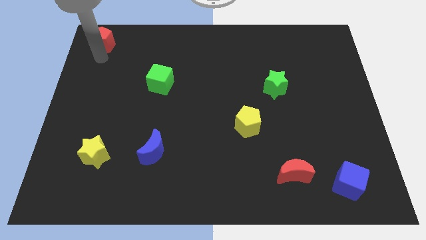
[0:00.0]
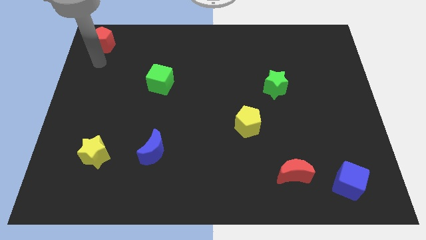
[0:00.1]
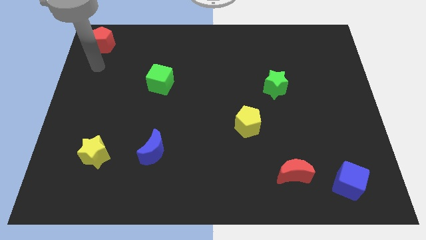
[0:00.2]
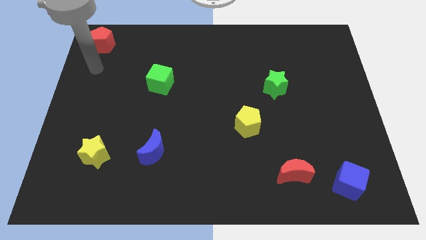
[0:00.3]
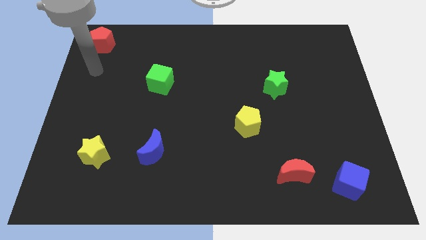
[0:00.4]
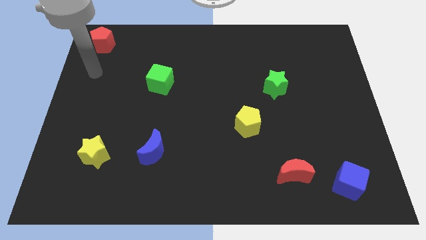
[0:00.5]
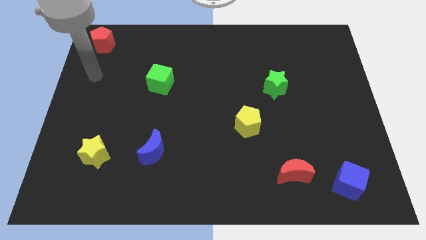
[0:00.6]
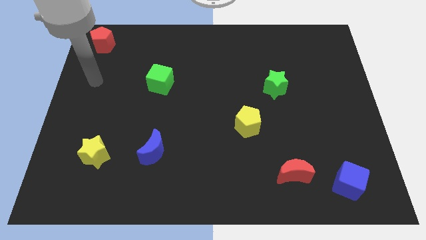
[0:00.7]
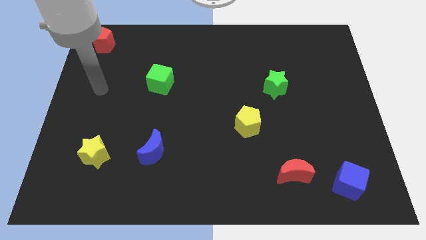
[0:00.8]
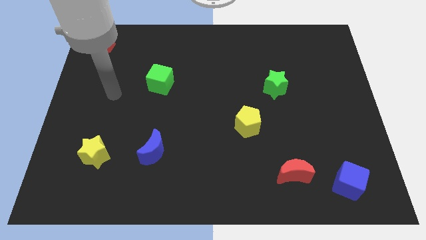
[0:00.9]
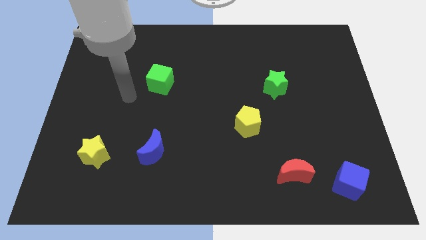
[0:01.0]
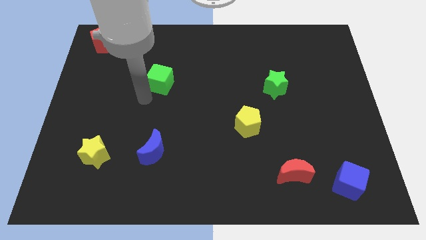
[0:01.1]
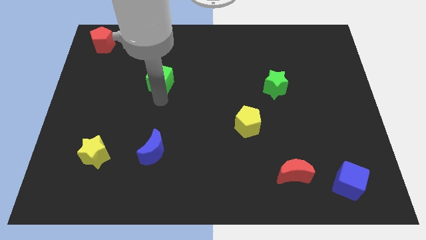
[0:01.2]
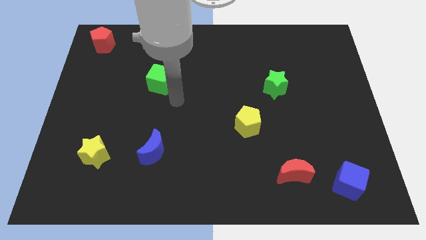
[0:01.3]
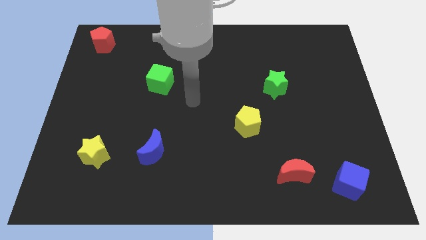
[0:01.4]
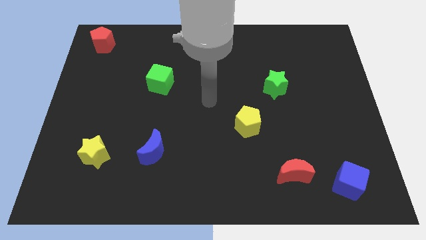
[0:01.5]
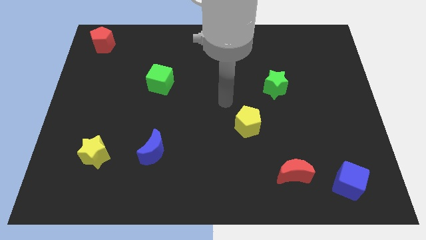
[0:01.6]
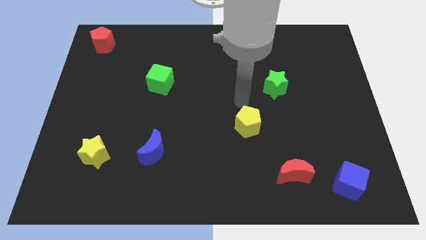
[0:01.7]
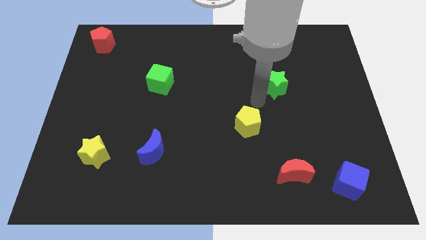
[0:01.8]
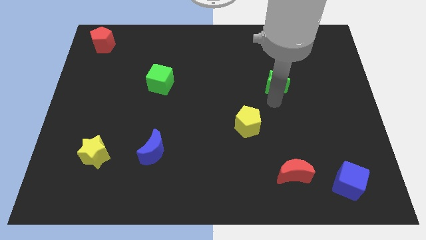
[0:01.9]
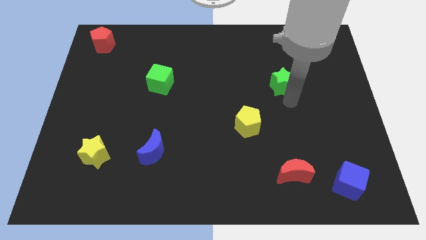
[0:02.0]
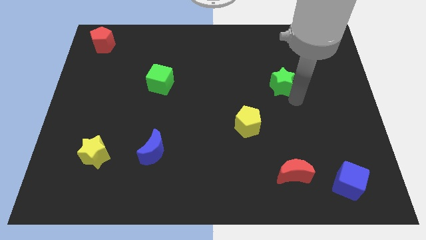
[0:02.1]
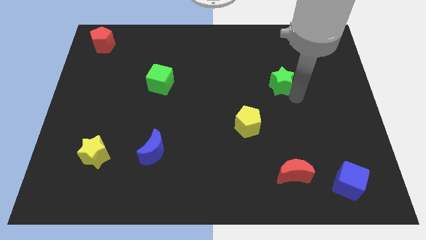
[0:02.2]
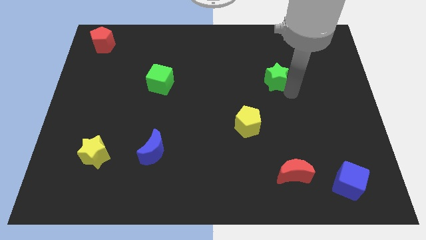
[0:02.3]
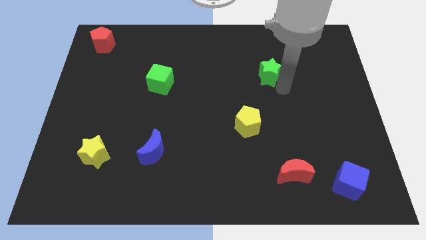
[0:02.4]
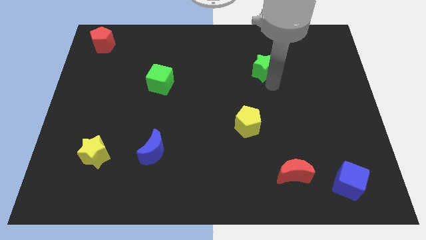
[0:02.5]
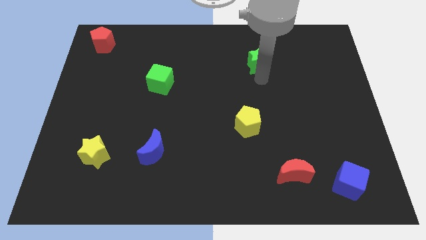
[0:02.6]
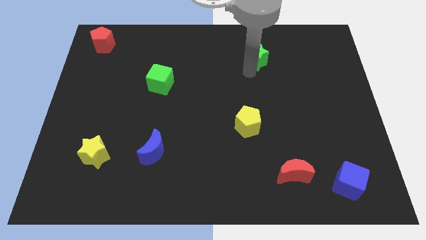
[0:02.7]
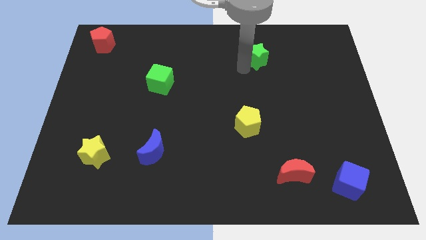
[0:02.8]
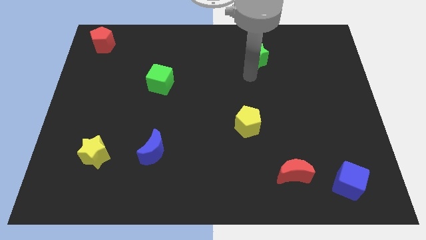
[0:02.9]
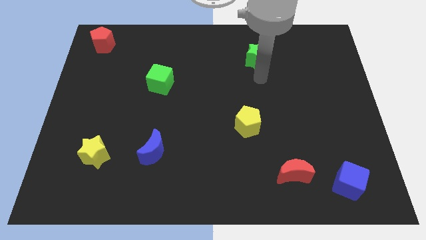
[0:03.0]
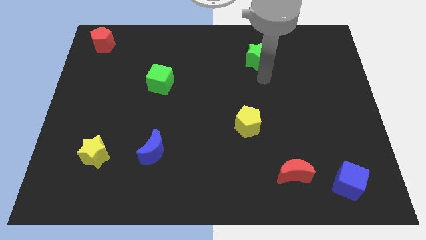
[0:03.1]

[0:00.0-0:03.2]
move arm near green star

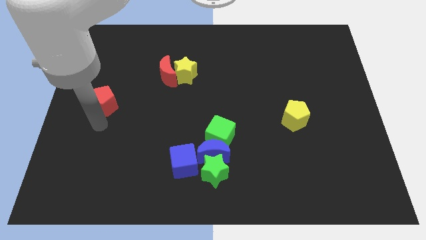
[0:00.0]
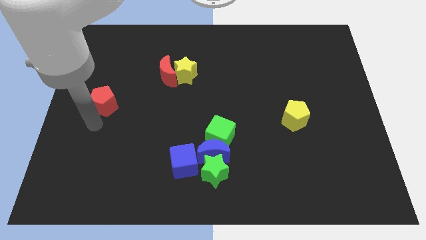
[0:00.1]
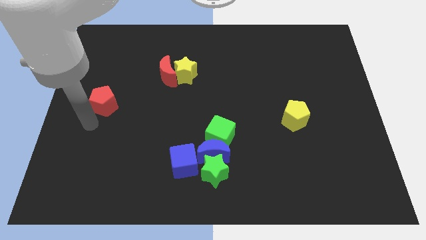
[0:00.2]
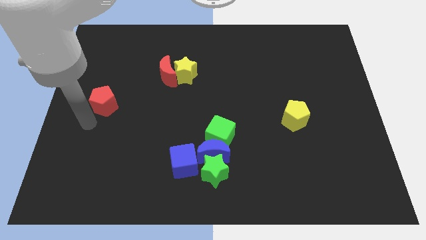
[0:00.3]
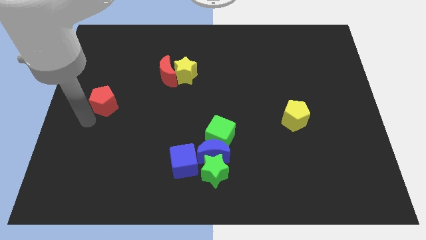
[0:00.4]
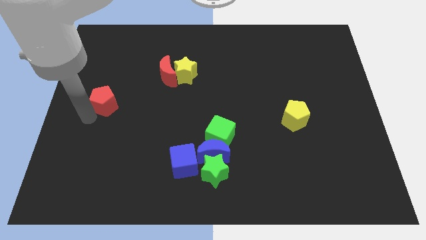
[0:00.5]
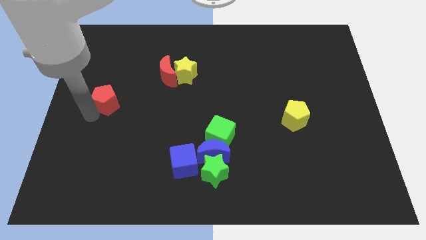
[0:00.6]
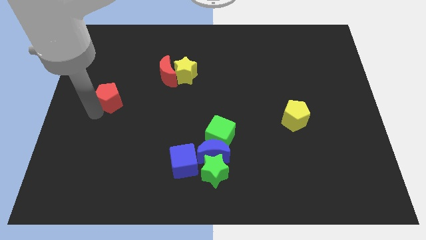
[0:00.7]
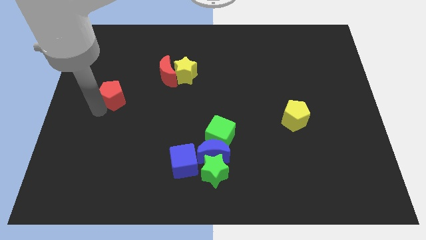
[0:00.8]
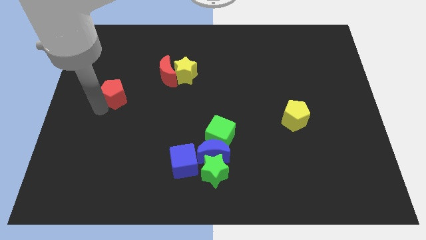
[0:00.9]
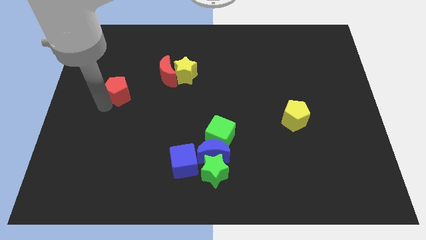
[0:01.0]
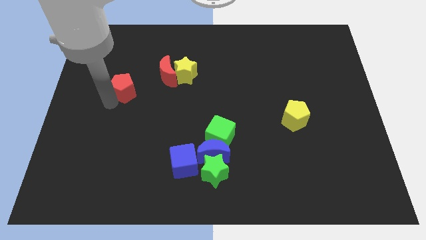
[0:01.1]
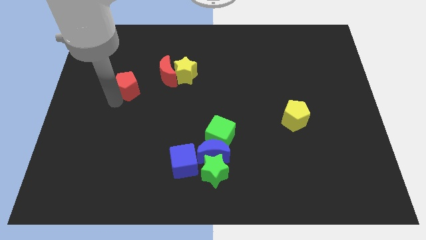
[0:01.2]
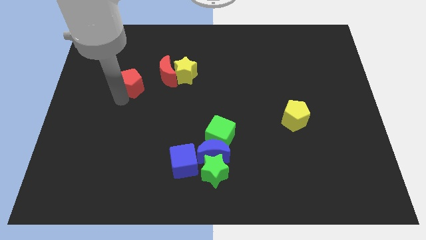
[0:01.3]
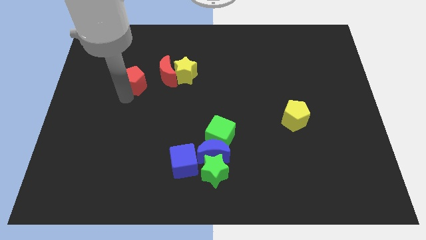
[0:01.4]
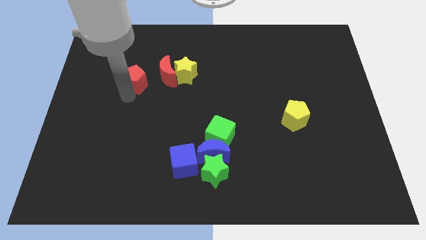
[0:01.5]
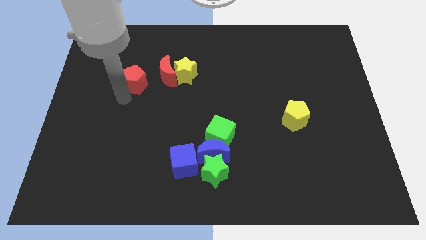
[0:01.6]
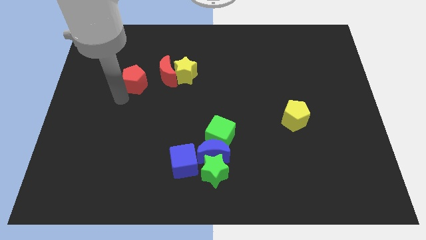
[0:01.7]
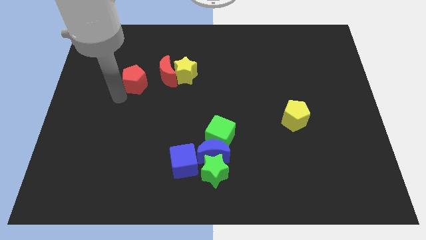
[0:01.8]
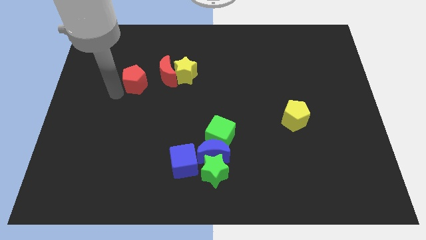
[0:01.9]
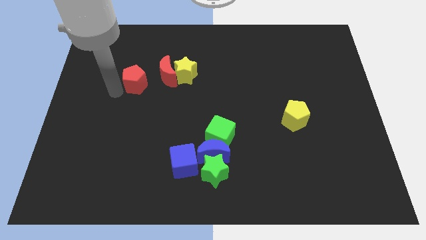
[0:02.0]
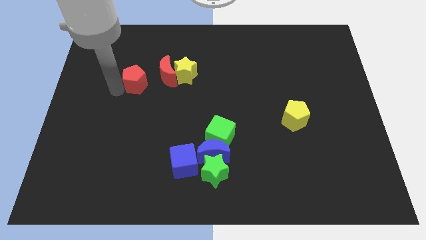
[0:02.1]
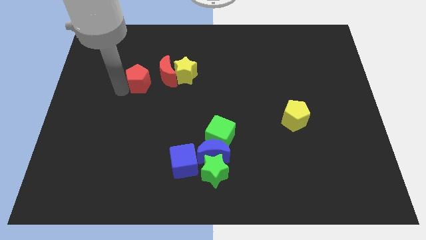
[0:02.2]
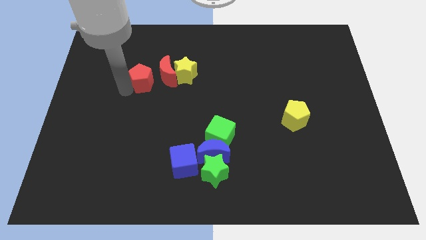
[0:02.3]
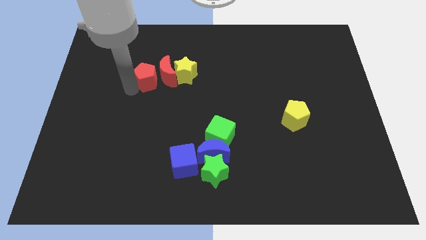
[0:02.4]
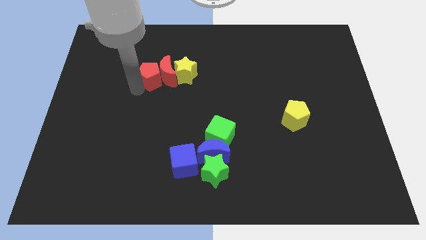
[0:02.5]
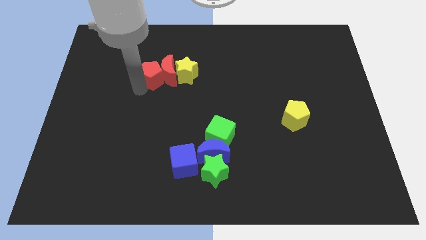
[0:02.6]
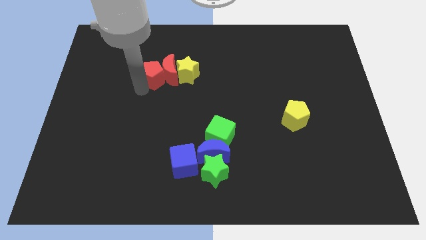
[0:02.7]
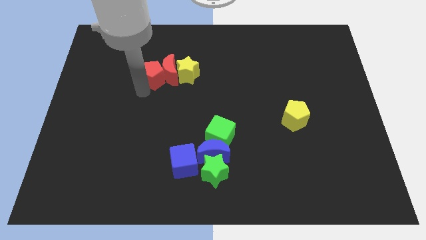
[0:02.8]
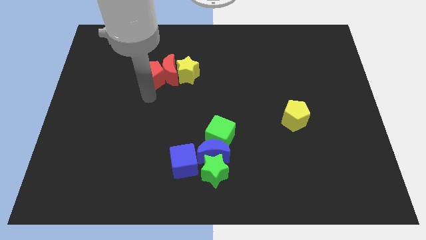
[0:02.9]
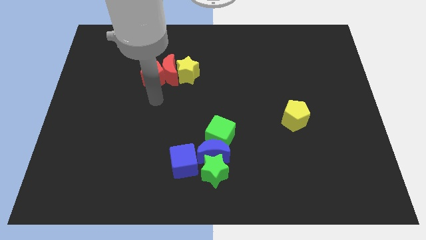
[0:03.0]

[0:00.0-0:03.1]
attach the red pentagon to the red moon

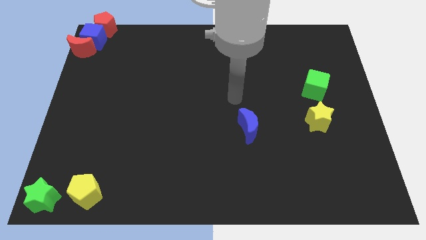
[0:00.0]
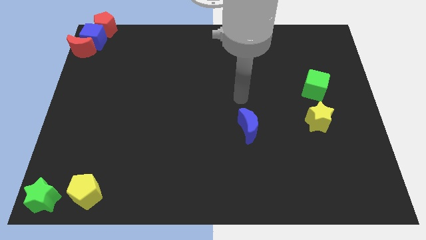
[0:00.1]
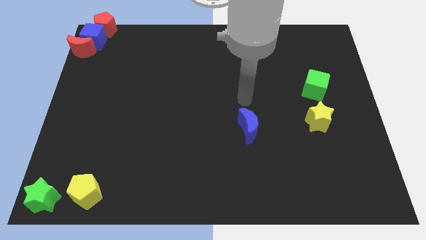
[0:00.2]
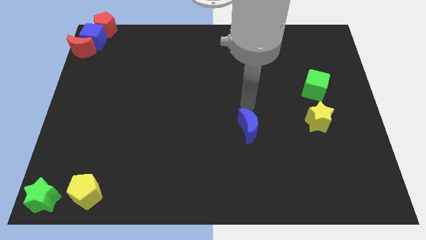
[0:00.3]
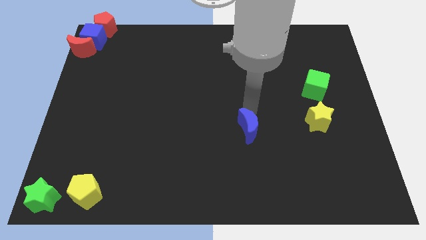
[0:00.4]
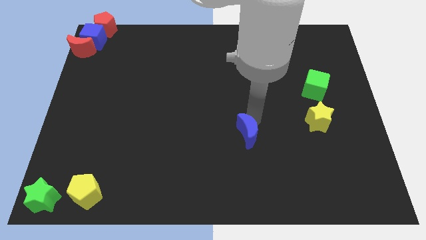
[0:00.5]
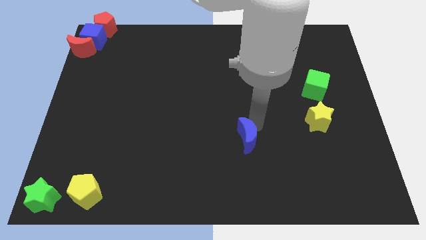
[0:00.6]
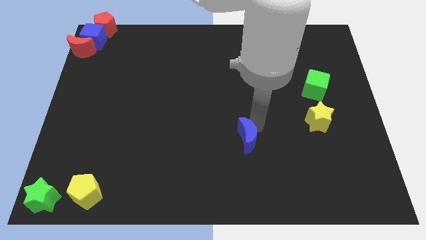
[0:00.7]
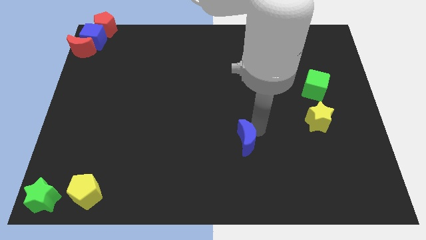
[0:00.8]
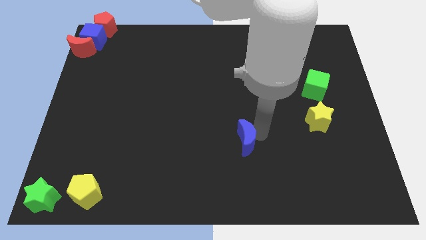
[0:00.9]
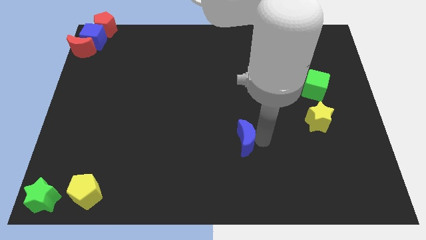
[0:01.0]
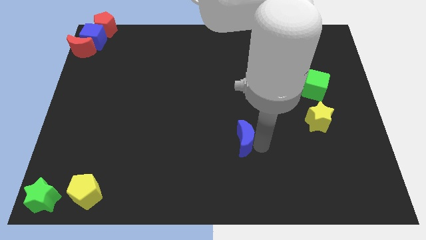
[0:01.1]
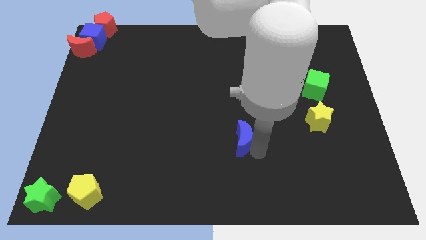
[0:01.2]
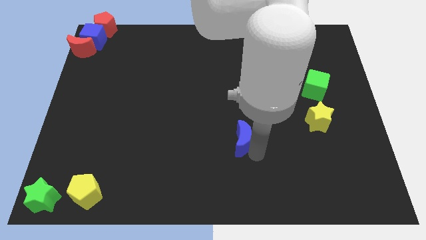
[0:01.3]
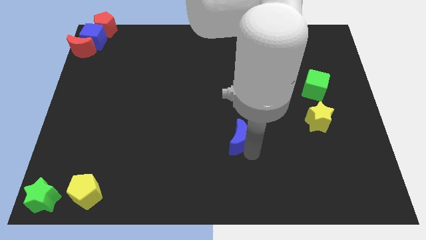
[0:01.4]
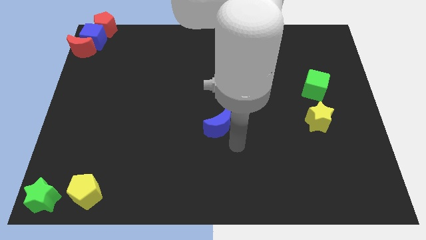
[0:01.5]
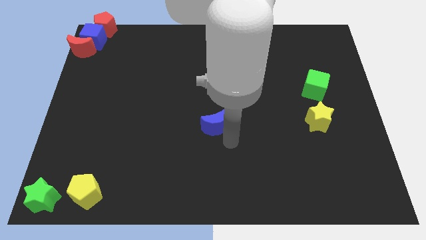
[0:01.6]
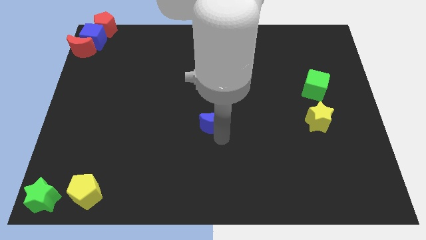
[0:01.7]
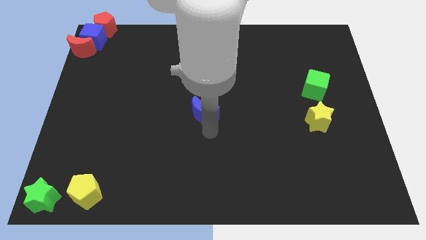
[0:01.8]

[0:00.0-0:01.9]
drag the blue moon to the center of the board

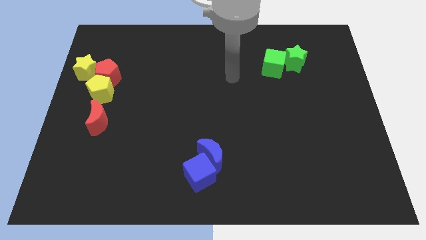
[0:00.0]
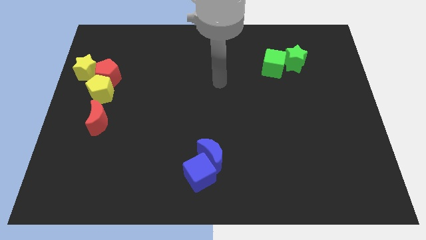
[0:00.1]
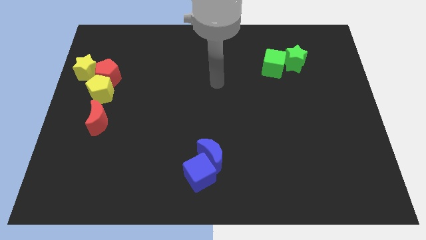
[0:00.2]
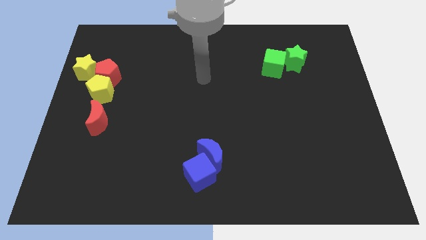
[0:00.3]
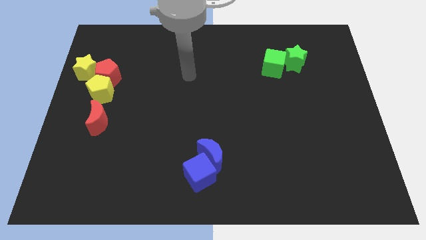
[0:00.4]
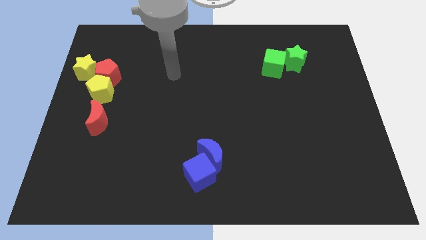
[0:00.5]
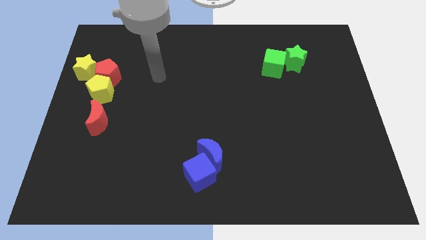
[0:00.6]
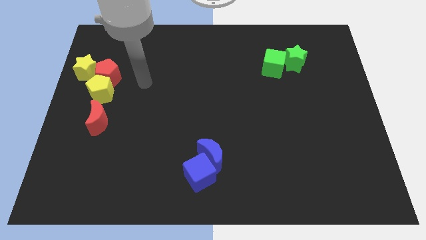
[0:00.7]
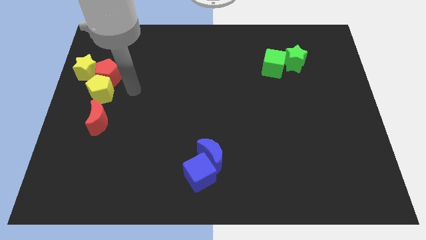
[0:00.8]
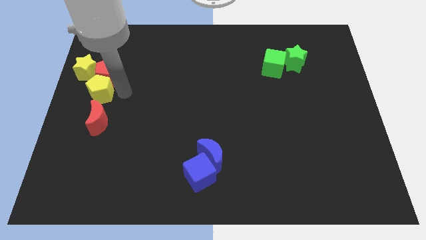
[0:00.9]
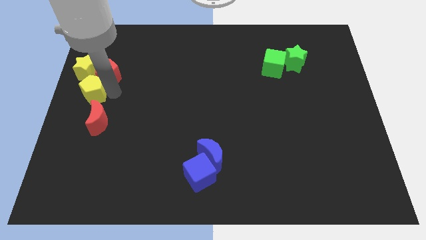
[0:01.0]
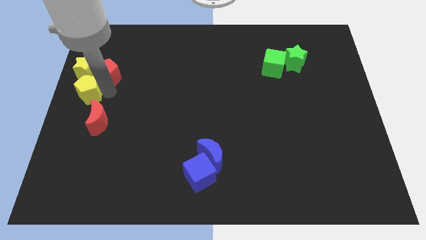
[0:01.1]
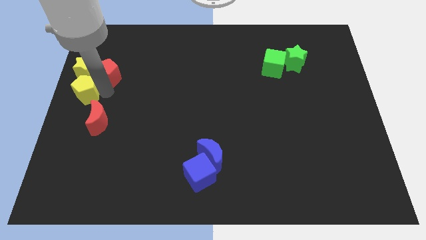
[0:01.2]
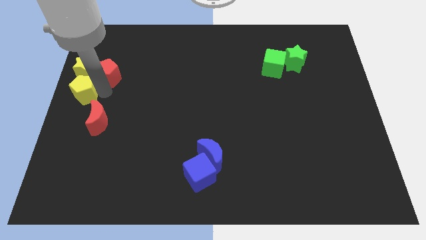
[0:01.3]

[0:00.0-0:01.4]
separate the yellow pentagon from the red pentagon
